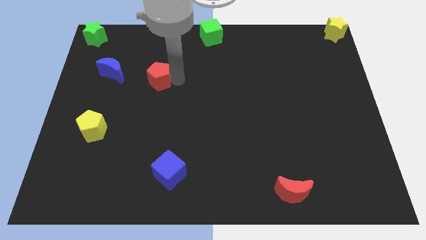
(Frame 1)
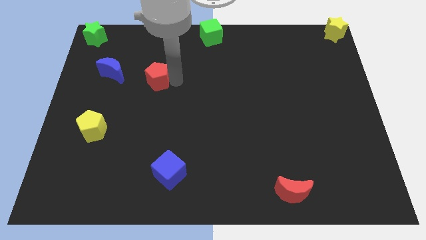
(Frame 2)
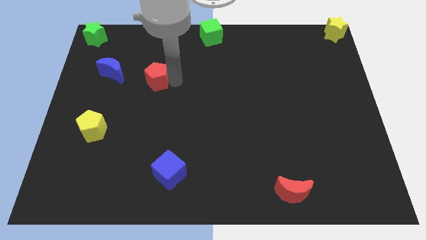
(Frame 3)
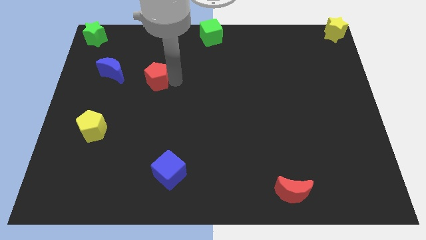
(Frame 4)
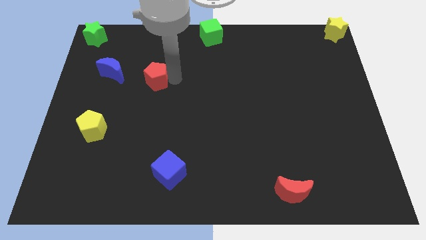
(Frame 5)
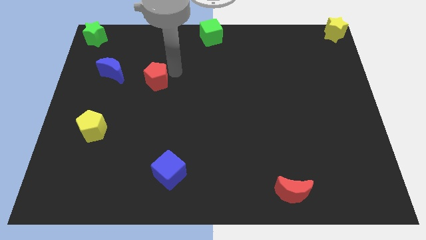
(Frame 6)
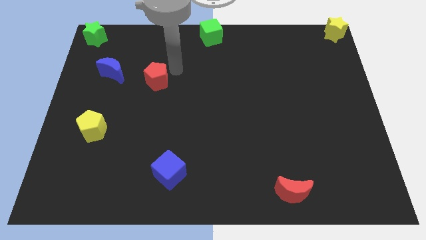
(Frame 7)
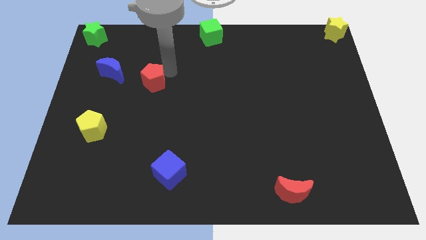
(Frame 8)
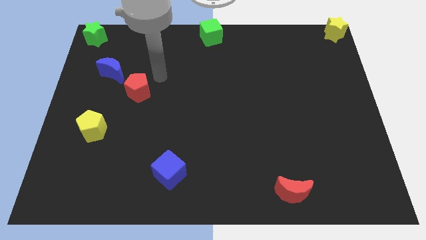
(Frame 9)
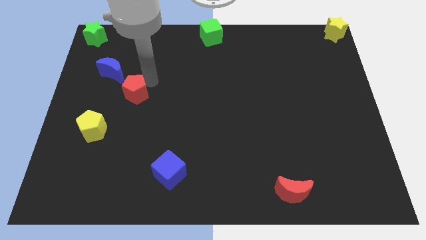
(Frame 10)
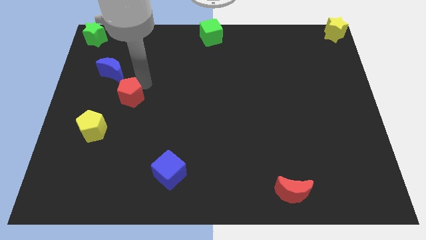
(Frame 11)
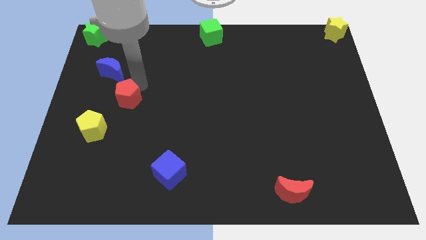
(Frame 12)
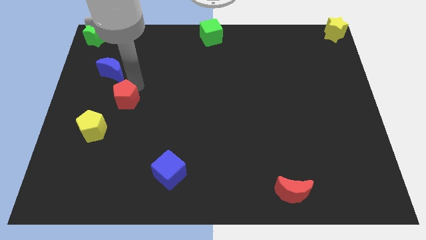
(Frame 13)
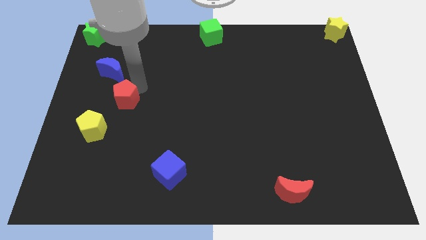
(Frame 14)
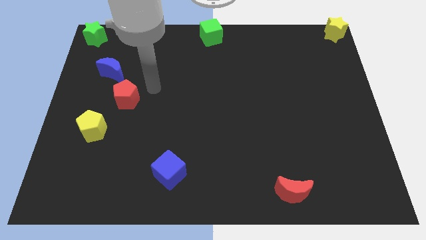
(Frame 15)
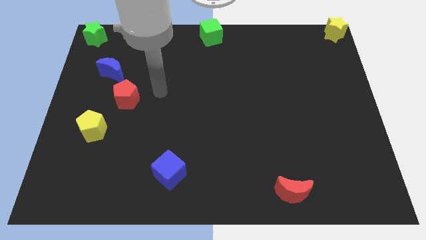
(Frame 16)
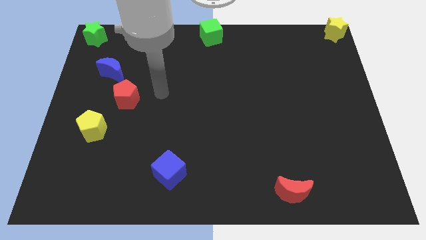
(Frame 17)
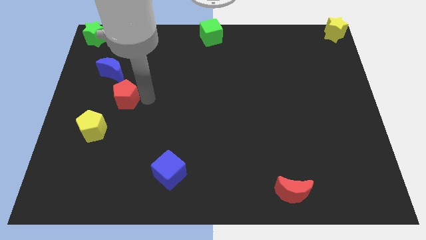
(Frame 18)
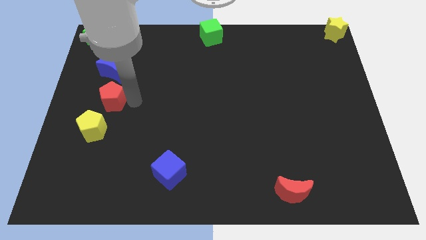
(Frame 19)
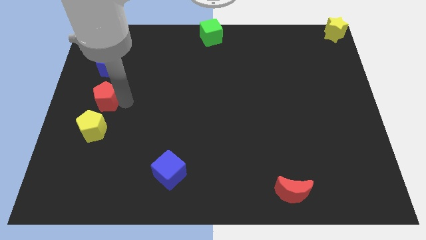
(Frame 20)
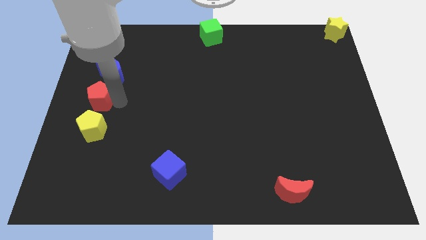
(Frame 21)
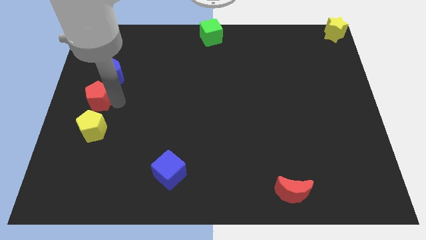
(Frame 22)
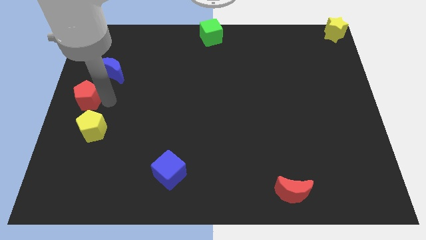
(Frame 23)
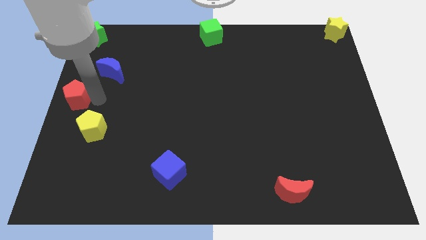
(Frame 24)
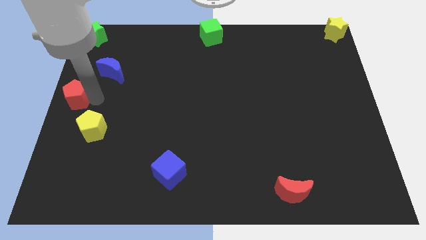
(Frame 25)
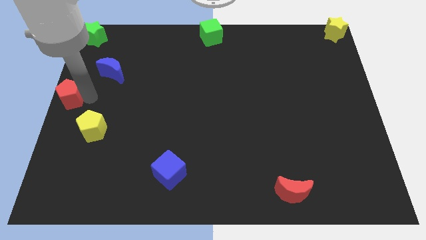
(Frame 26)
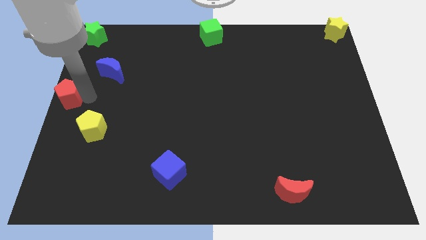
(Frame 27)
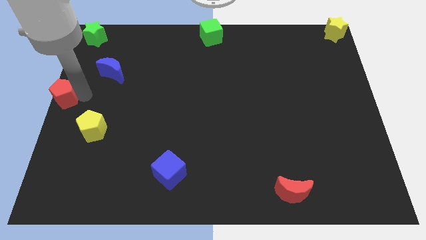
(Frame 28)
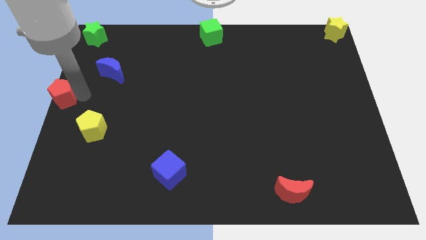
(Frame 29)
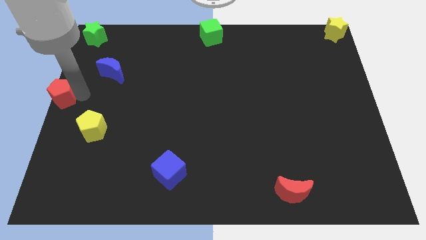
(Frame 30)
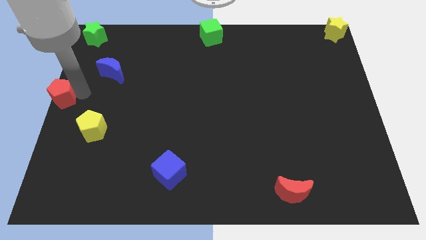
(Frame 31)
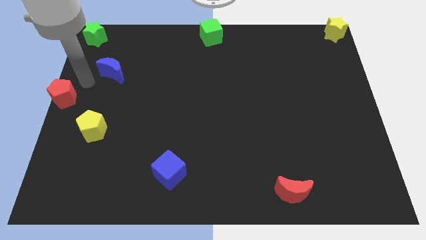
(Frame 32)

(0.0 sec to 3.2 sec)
move the red pentagon diagonally top left to the yellow pentagon

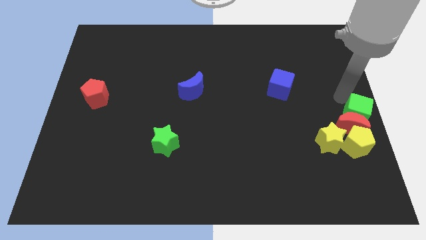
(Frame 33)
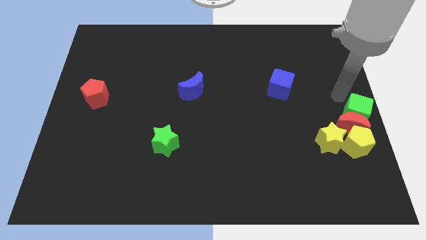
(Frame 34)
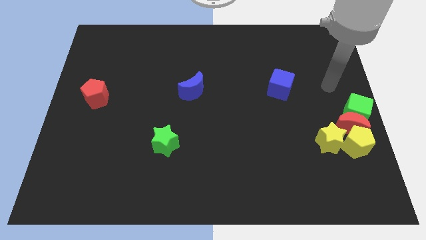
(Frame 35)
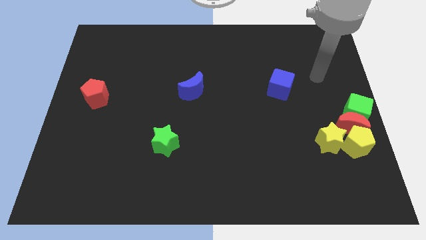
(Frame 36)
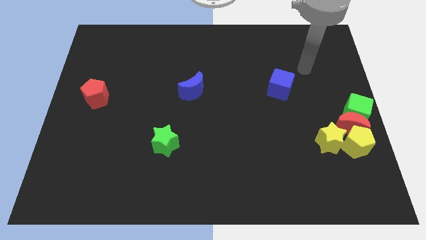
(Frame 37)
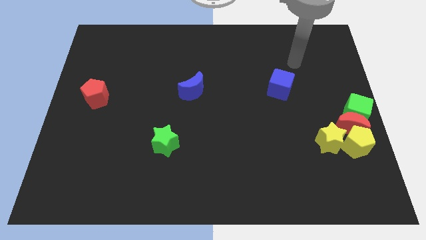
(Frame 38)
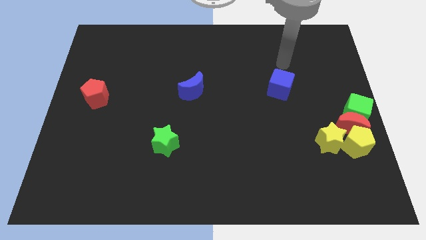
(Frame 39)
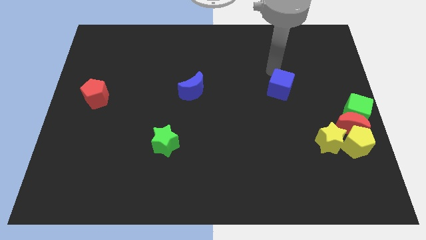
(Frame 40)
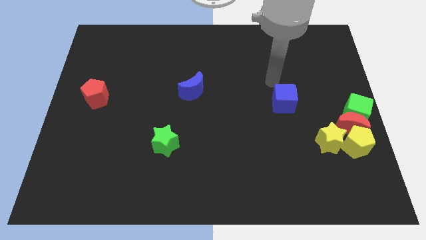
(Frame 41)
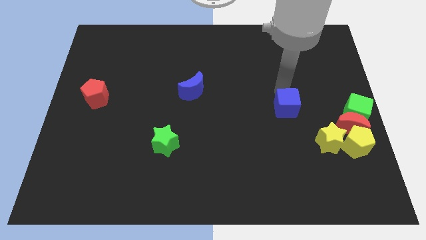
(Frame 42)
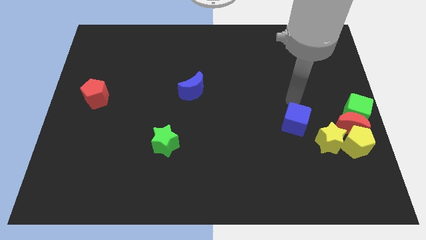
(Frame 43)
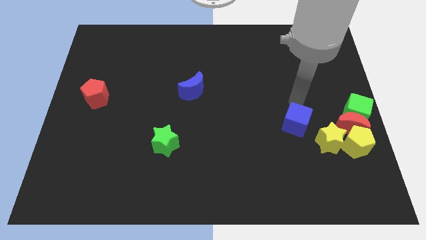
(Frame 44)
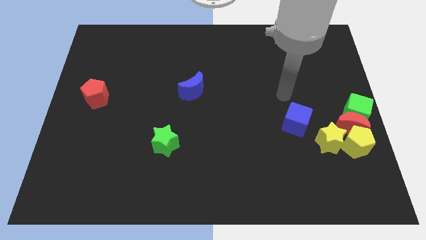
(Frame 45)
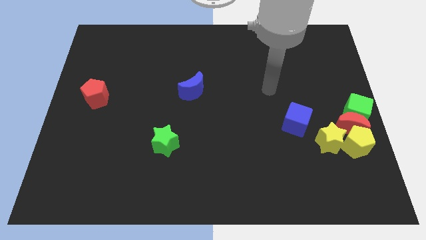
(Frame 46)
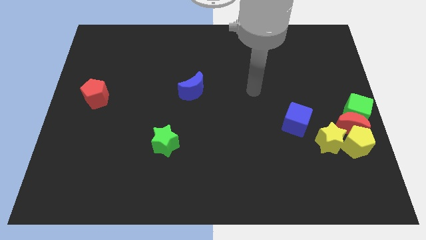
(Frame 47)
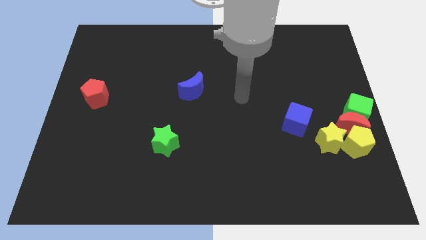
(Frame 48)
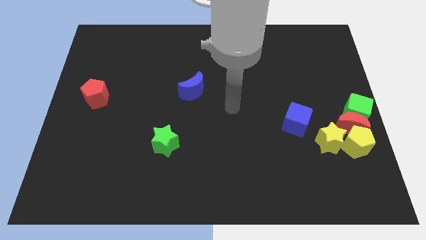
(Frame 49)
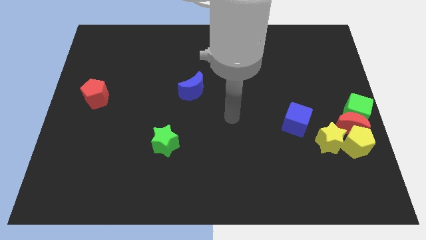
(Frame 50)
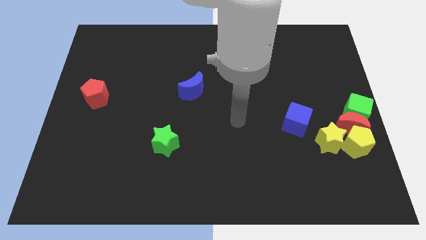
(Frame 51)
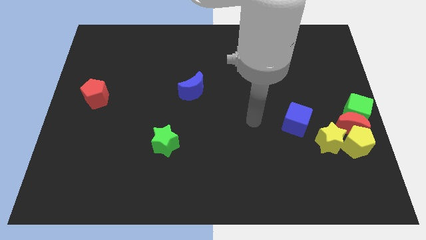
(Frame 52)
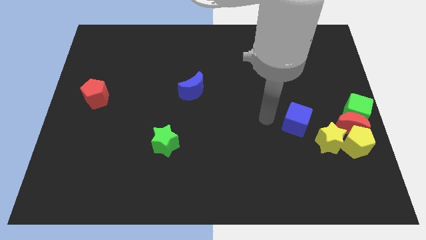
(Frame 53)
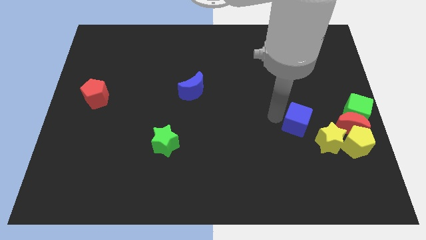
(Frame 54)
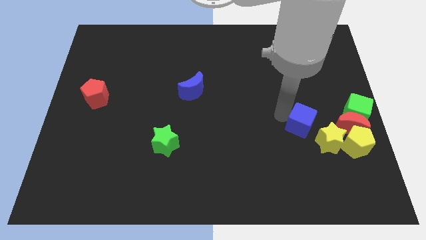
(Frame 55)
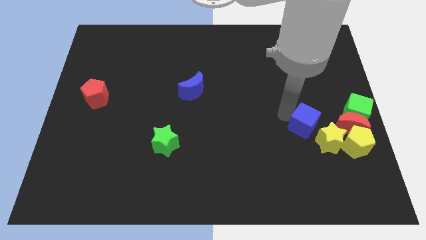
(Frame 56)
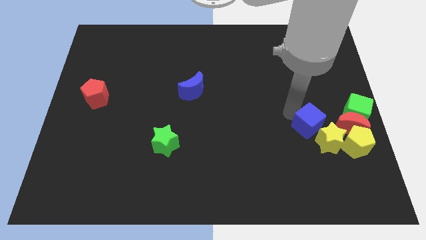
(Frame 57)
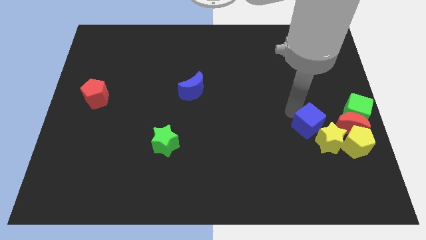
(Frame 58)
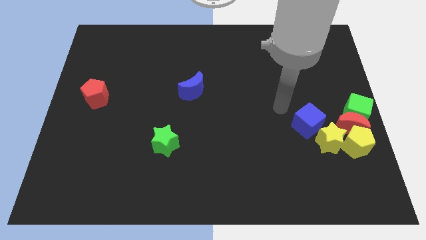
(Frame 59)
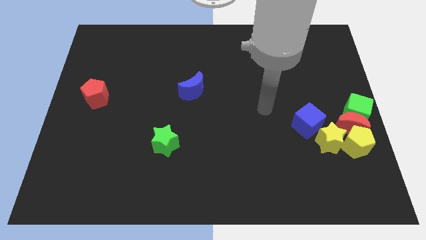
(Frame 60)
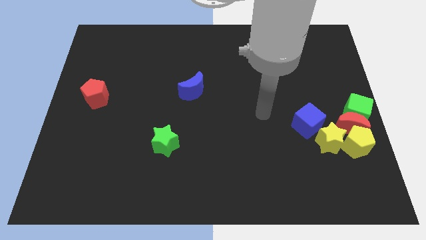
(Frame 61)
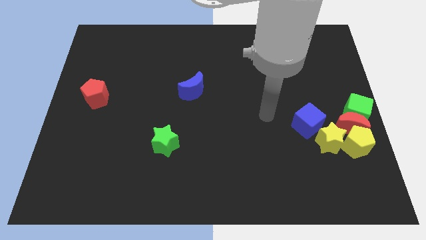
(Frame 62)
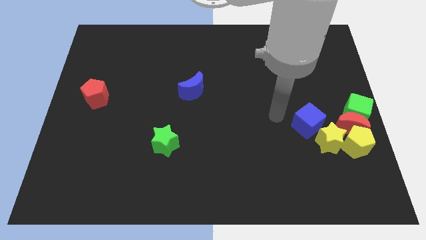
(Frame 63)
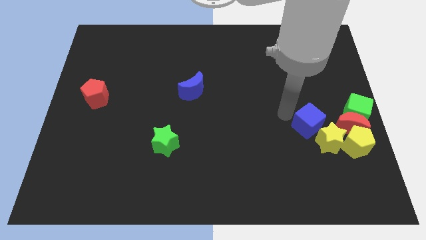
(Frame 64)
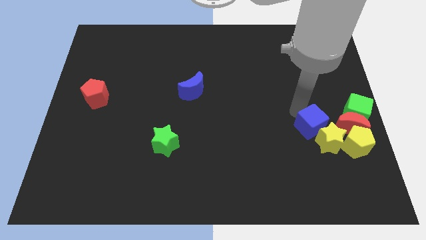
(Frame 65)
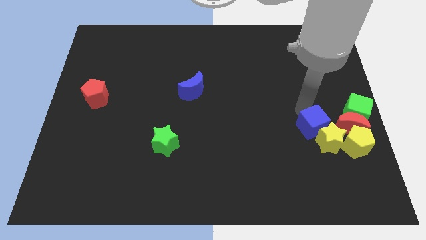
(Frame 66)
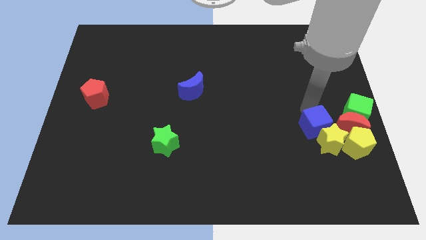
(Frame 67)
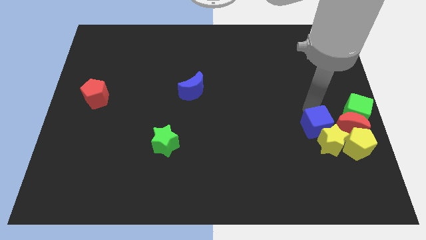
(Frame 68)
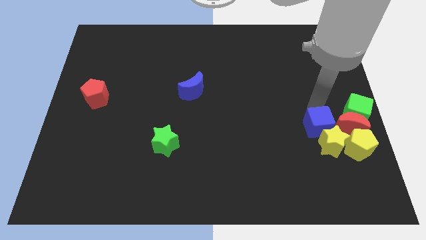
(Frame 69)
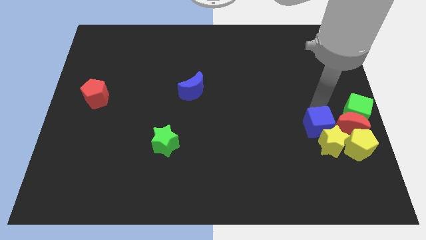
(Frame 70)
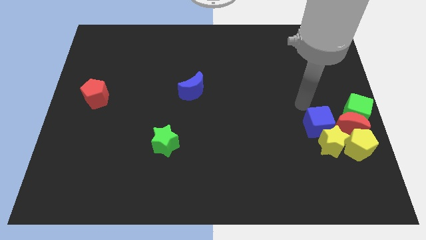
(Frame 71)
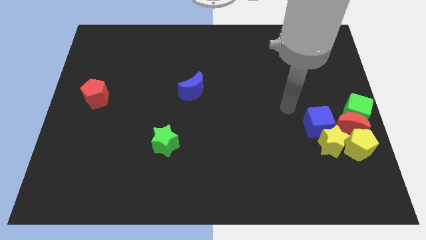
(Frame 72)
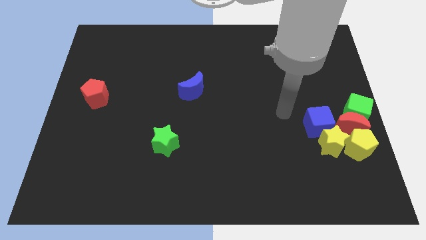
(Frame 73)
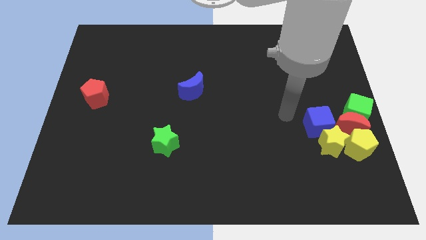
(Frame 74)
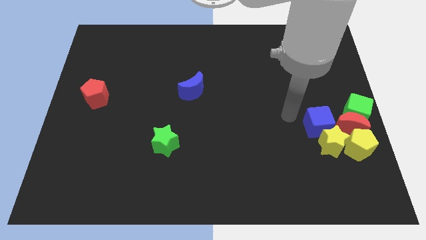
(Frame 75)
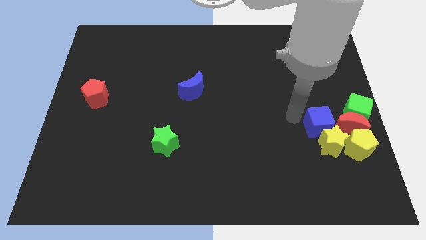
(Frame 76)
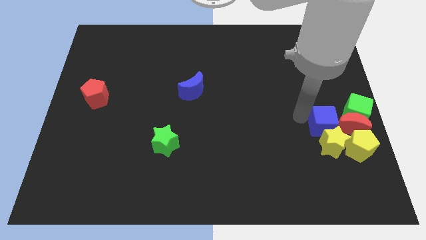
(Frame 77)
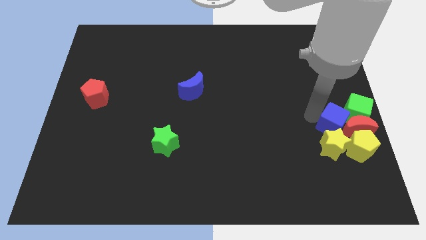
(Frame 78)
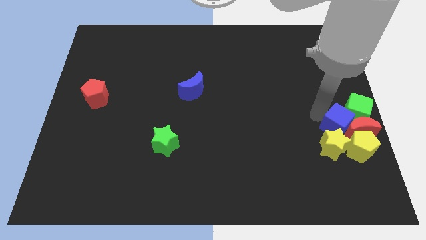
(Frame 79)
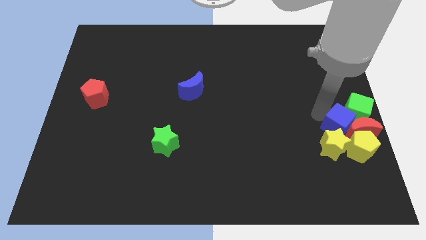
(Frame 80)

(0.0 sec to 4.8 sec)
move the blue cube into the group of blocks

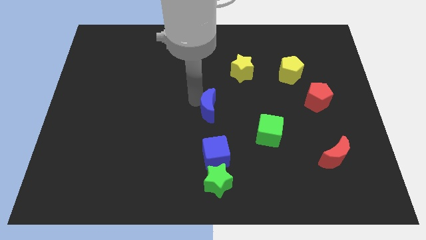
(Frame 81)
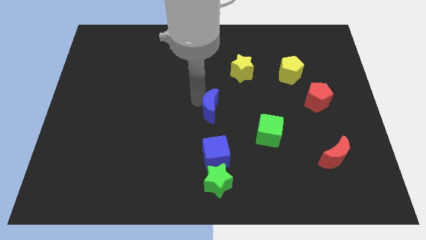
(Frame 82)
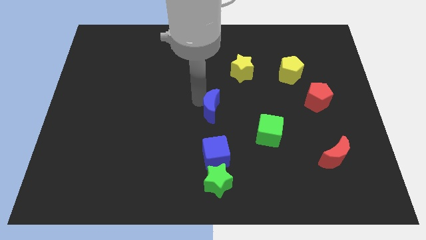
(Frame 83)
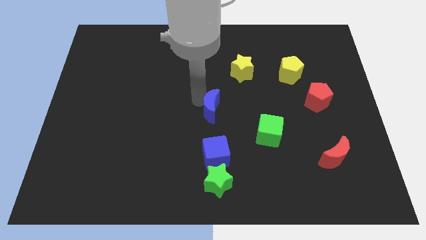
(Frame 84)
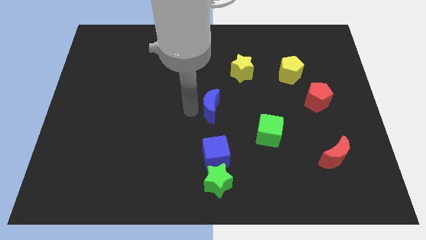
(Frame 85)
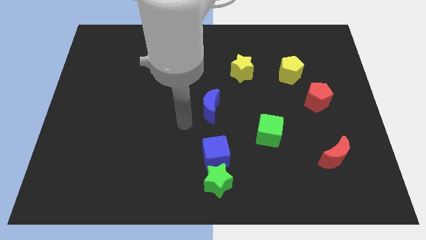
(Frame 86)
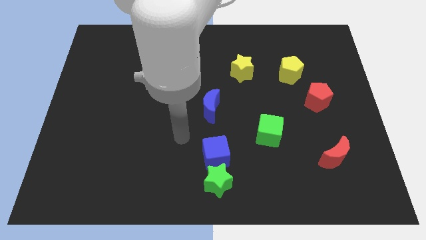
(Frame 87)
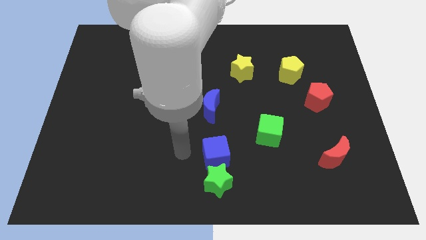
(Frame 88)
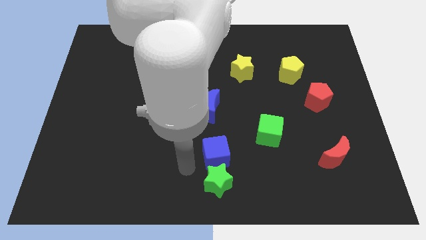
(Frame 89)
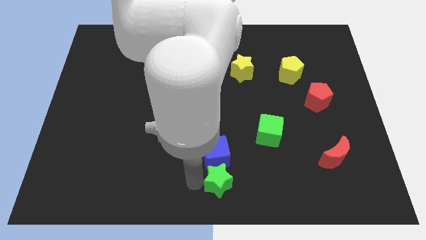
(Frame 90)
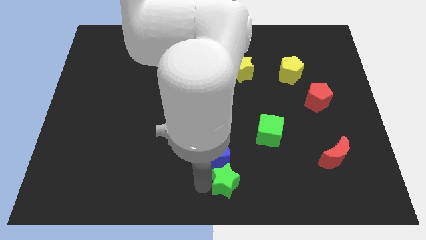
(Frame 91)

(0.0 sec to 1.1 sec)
tap the left side of the green star
